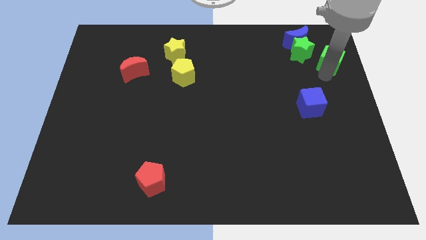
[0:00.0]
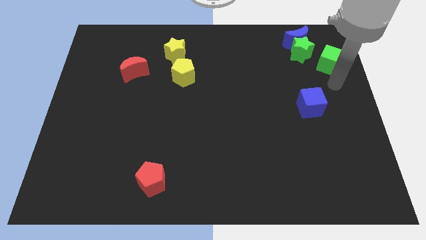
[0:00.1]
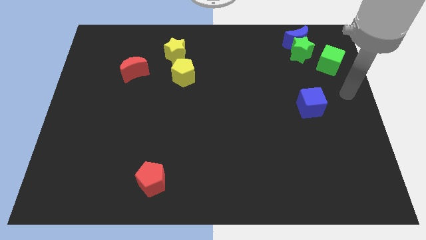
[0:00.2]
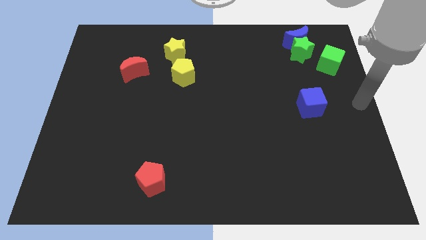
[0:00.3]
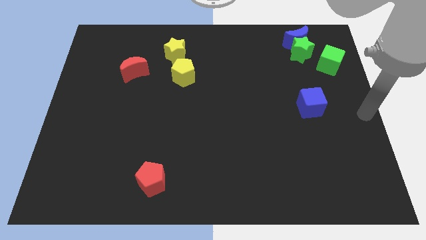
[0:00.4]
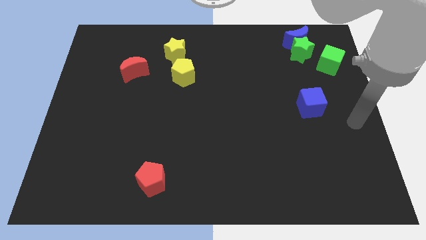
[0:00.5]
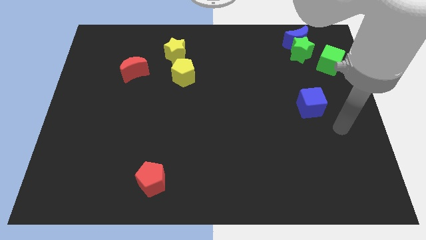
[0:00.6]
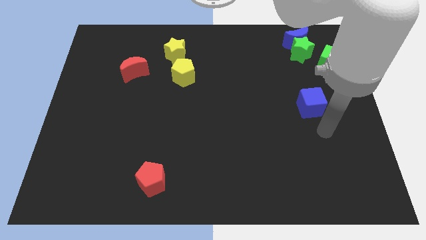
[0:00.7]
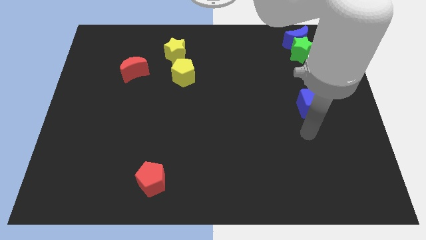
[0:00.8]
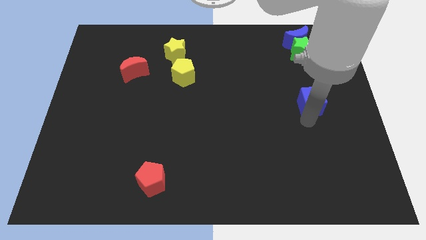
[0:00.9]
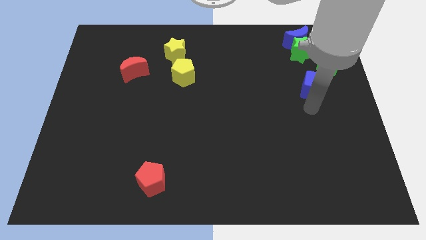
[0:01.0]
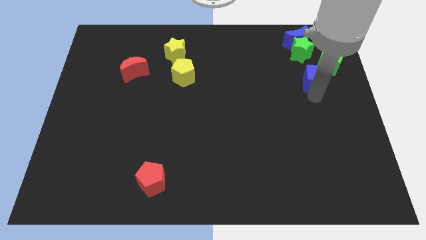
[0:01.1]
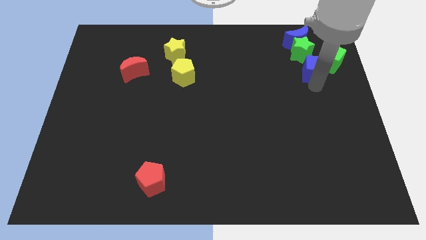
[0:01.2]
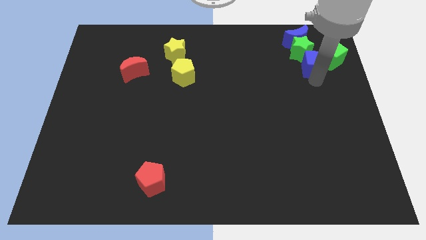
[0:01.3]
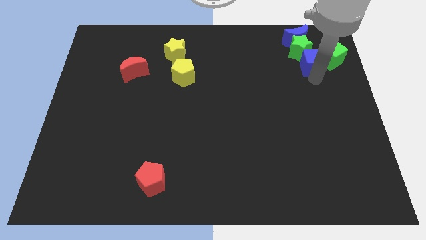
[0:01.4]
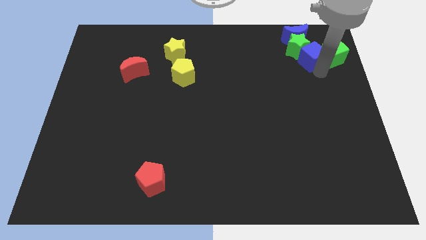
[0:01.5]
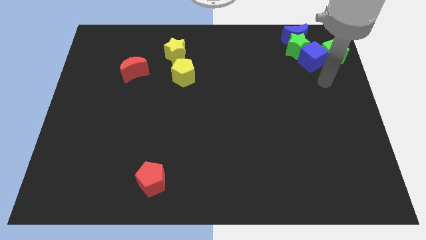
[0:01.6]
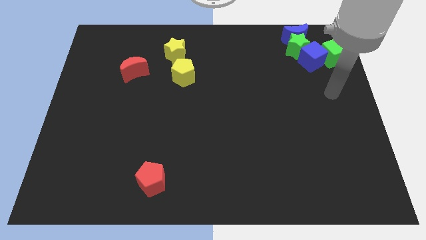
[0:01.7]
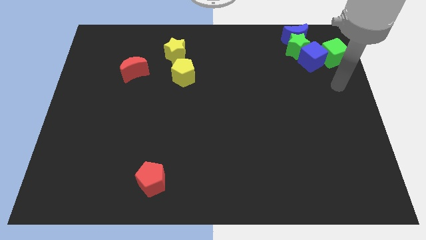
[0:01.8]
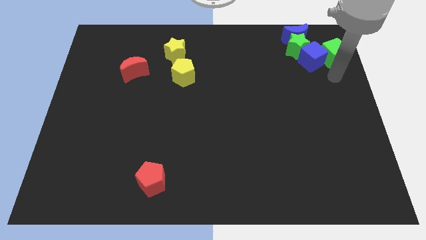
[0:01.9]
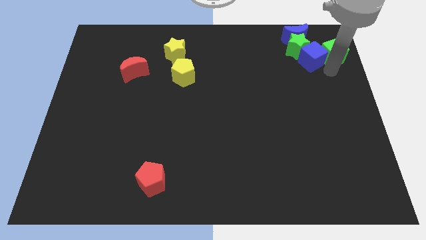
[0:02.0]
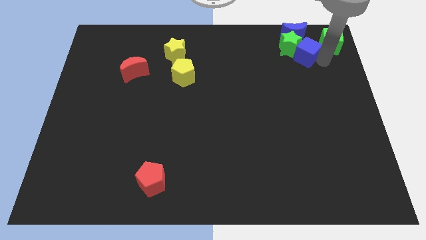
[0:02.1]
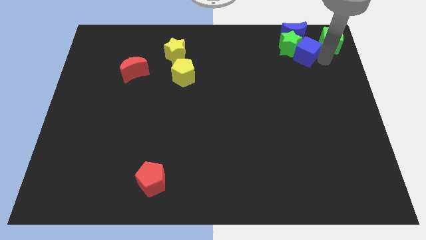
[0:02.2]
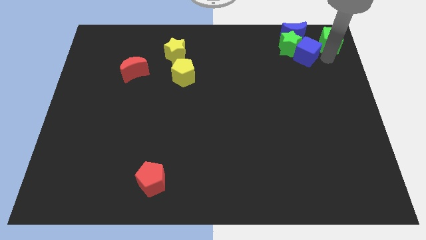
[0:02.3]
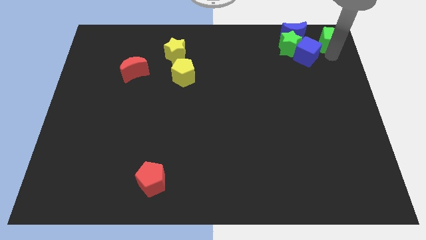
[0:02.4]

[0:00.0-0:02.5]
move the blue cube to the right of the green star

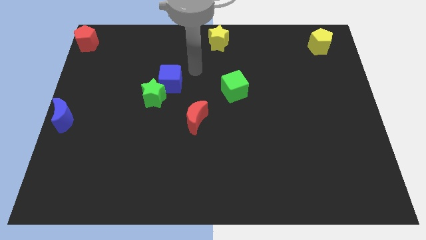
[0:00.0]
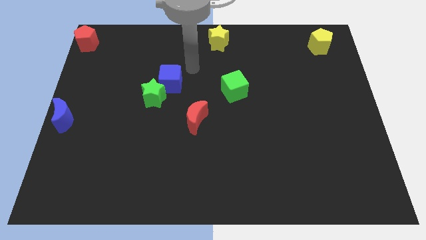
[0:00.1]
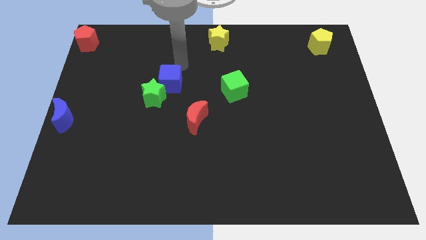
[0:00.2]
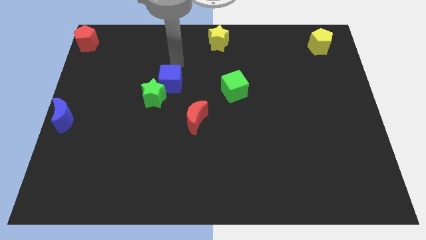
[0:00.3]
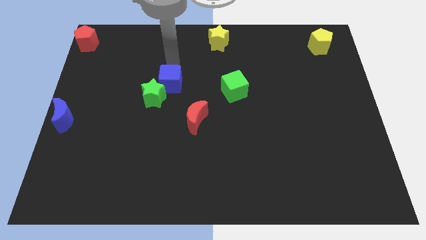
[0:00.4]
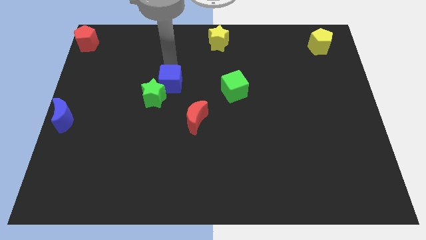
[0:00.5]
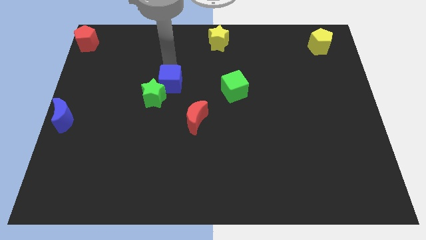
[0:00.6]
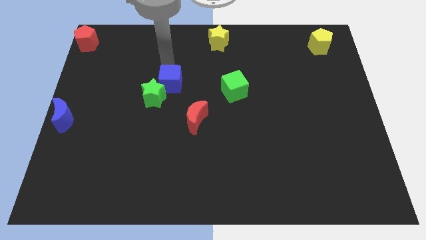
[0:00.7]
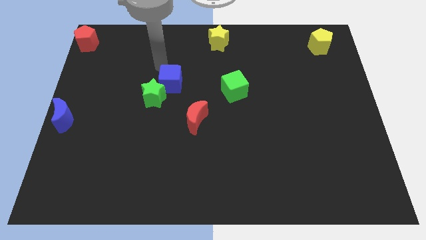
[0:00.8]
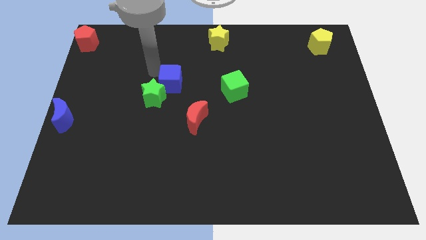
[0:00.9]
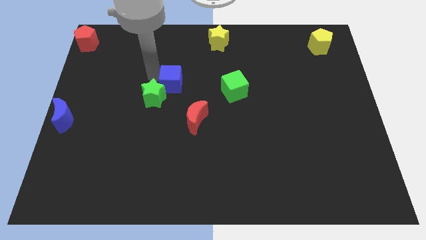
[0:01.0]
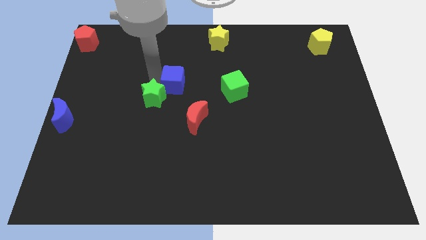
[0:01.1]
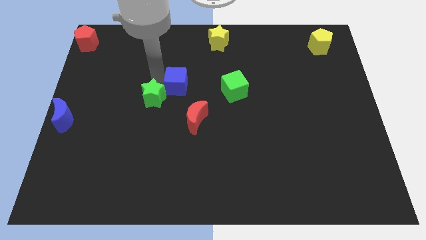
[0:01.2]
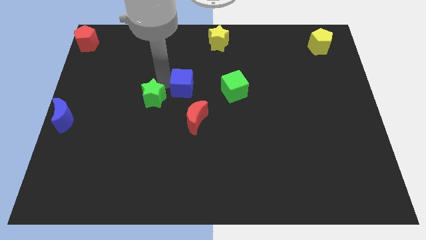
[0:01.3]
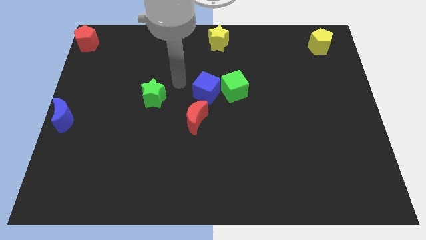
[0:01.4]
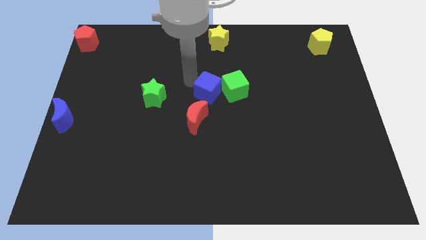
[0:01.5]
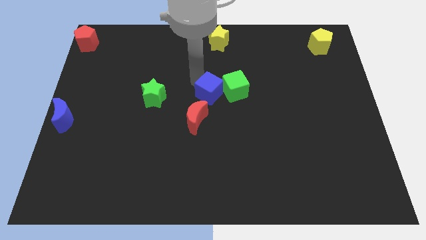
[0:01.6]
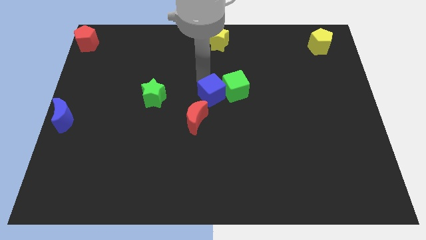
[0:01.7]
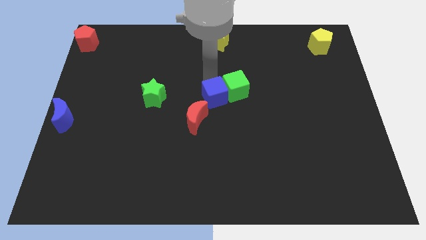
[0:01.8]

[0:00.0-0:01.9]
move the blue cube close to the green cube

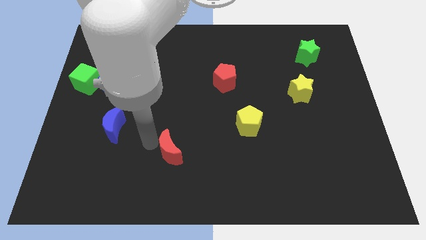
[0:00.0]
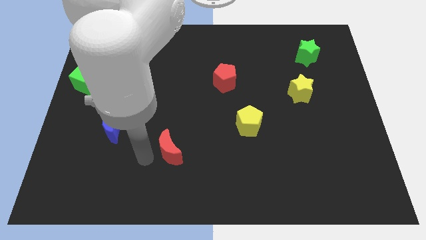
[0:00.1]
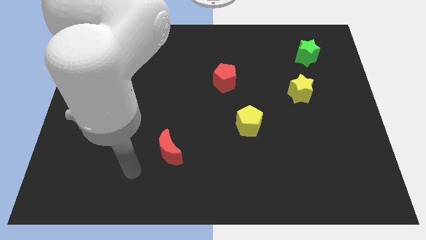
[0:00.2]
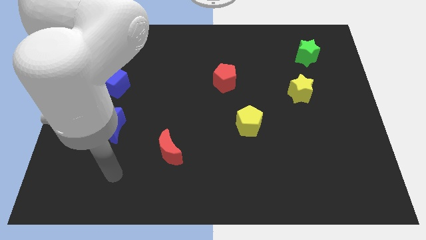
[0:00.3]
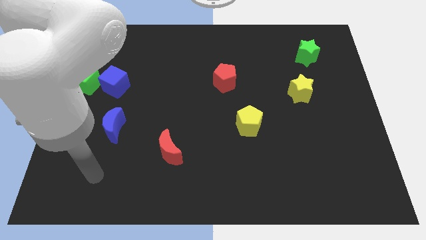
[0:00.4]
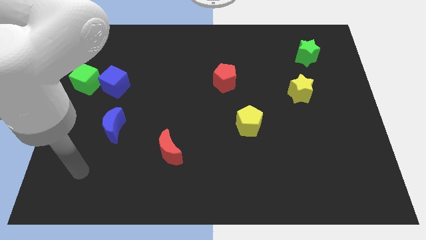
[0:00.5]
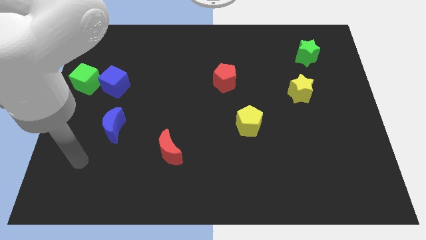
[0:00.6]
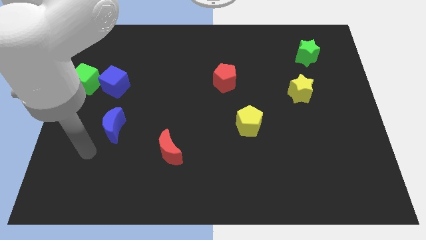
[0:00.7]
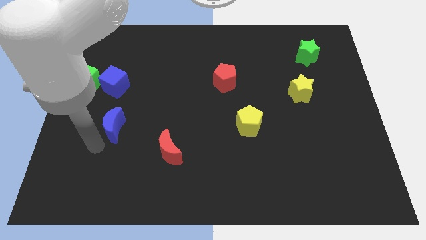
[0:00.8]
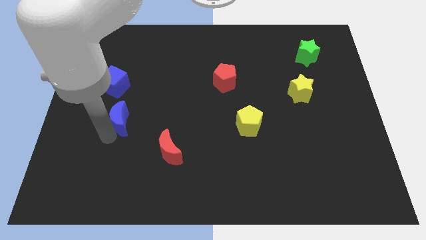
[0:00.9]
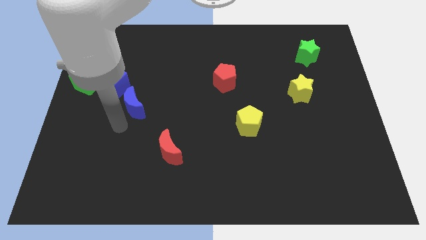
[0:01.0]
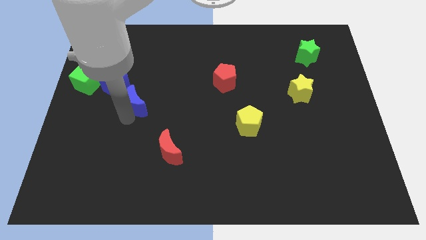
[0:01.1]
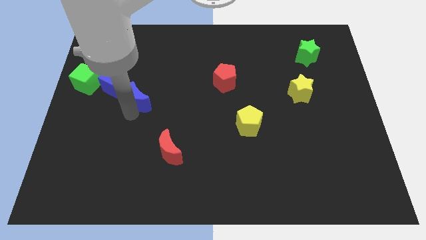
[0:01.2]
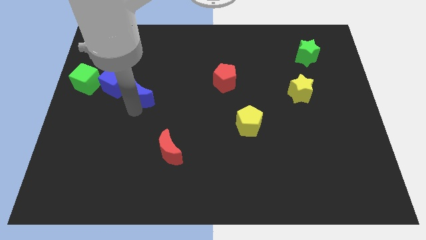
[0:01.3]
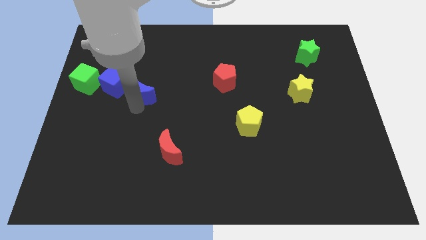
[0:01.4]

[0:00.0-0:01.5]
push the blue crescent to the right of the blue cube

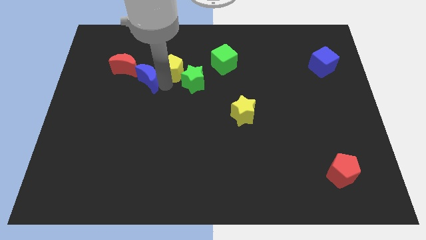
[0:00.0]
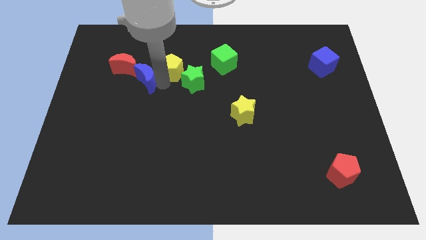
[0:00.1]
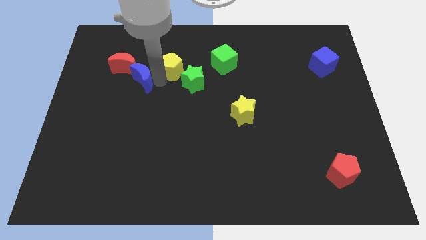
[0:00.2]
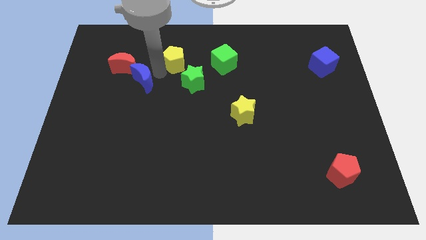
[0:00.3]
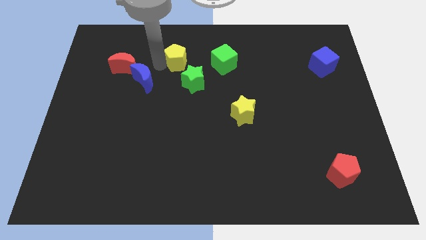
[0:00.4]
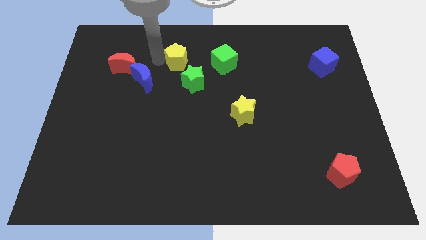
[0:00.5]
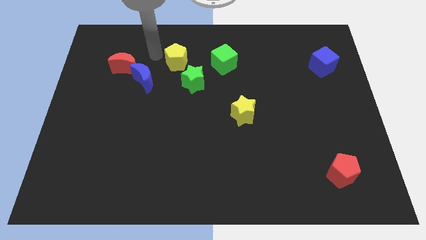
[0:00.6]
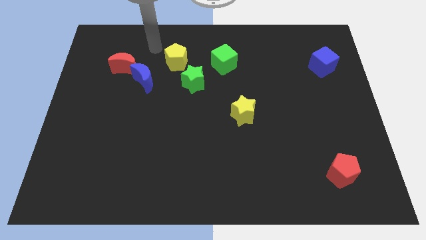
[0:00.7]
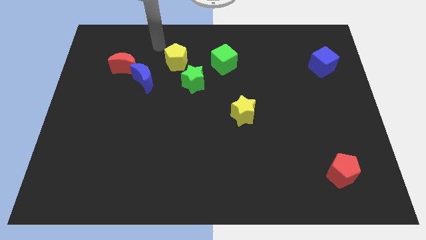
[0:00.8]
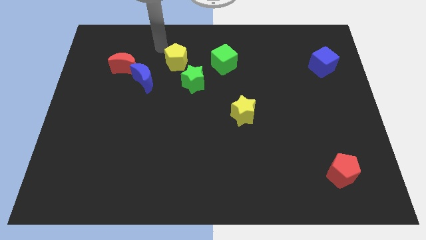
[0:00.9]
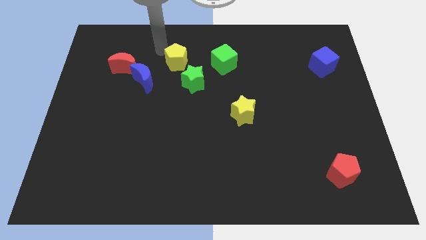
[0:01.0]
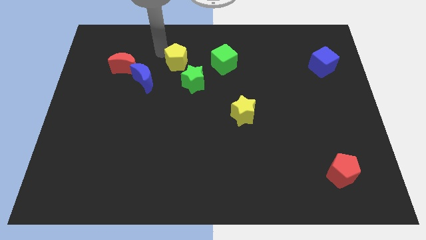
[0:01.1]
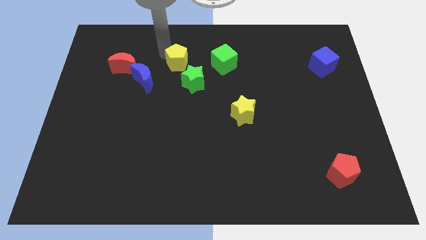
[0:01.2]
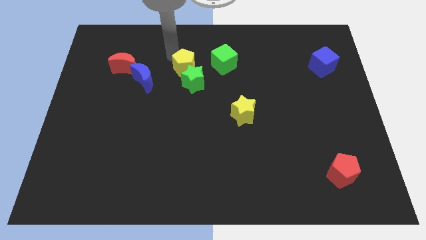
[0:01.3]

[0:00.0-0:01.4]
slightly push the yellow pentagon towards the top center of the board

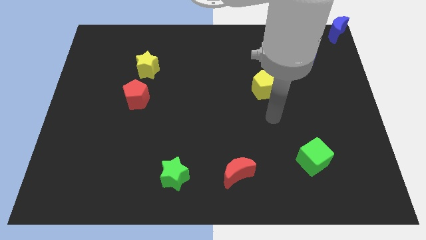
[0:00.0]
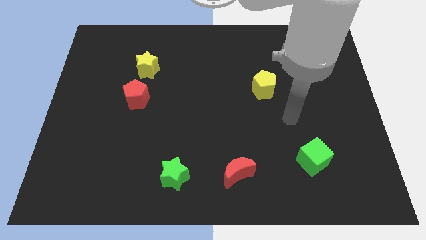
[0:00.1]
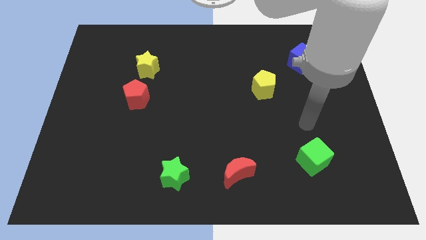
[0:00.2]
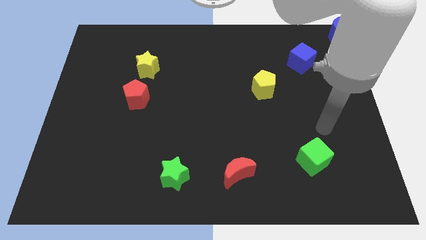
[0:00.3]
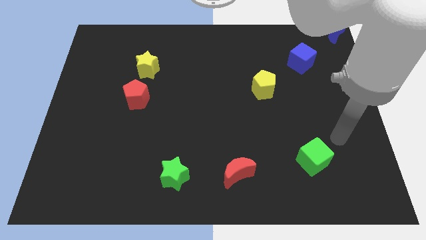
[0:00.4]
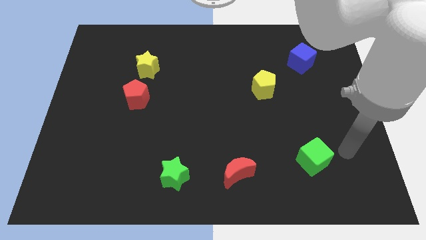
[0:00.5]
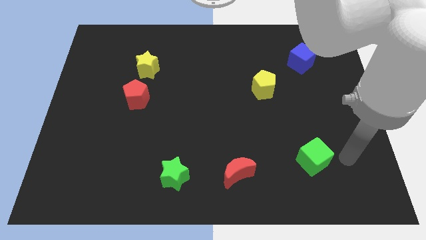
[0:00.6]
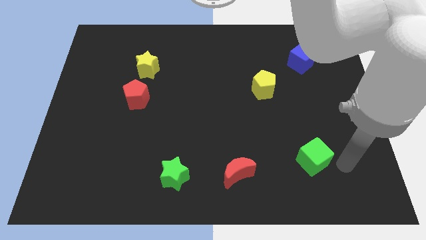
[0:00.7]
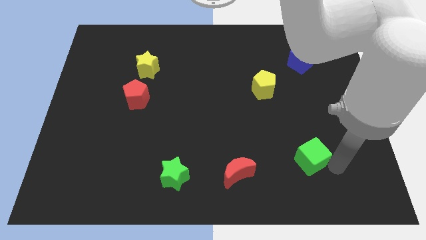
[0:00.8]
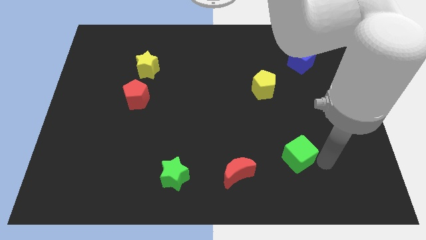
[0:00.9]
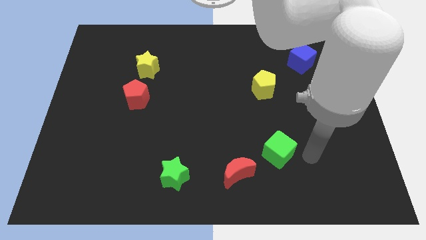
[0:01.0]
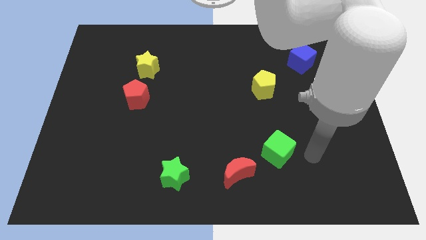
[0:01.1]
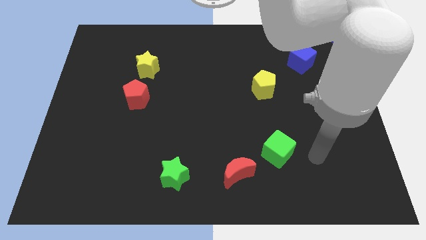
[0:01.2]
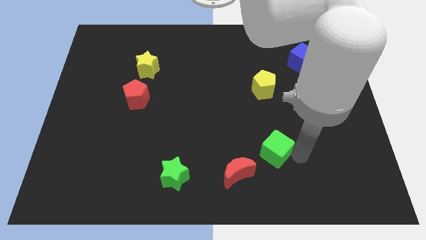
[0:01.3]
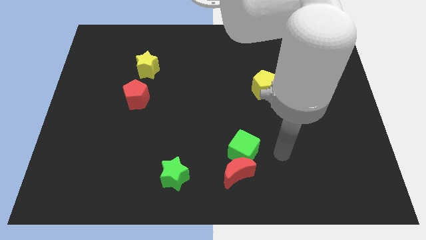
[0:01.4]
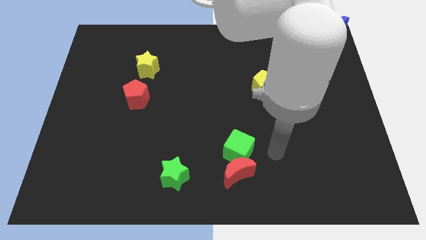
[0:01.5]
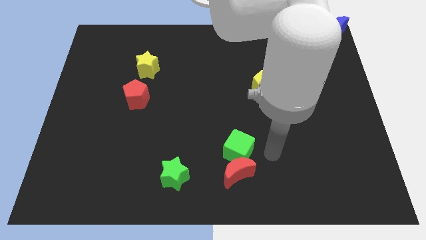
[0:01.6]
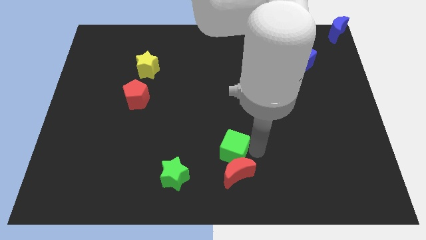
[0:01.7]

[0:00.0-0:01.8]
place the green cube at the top of red crescent
